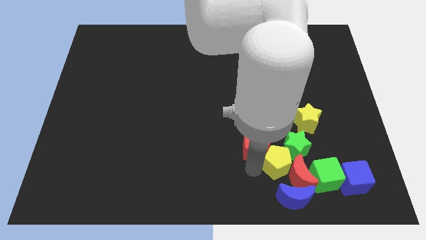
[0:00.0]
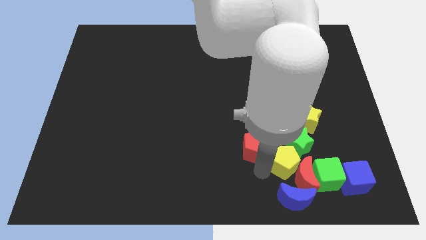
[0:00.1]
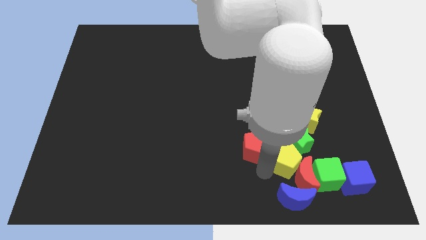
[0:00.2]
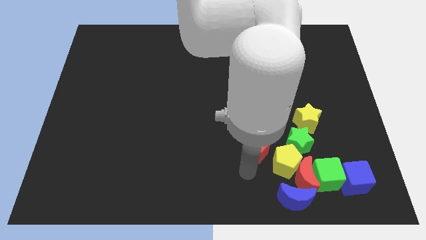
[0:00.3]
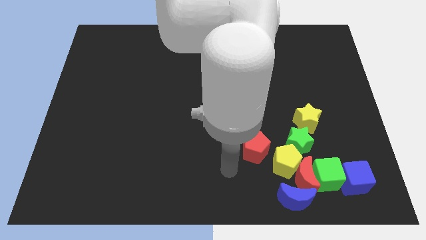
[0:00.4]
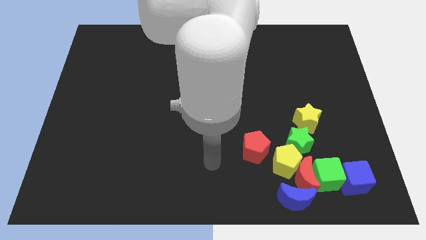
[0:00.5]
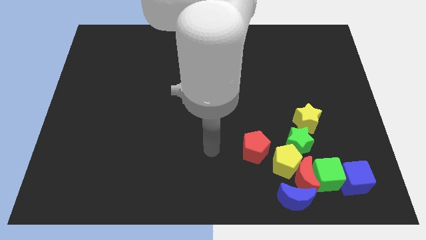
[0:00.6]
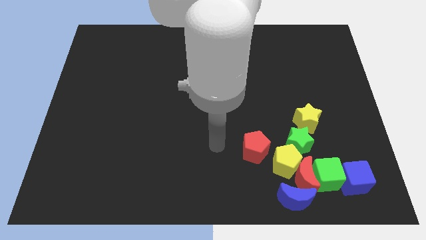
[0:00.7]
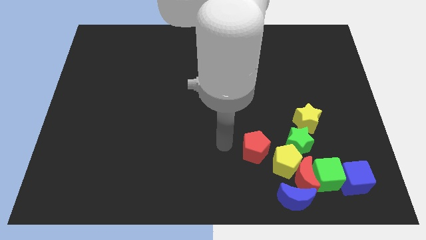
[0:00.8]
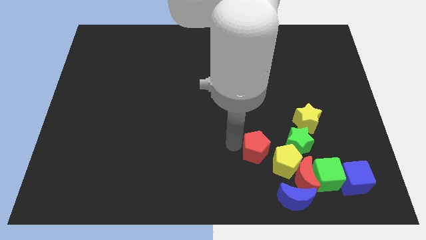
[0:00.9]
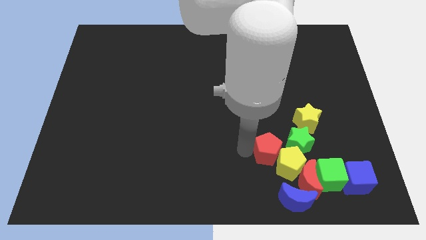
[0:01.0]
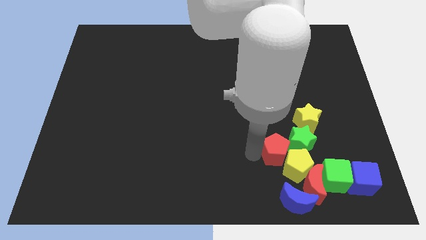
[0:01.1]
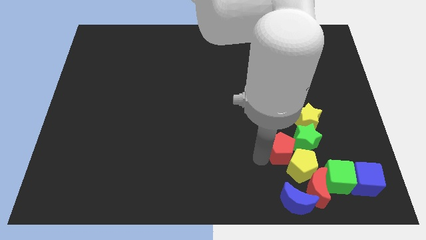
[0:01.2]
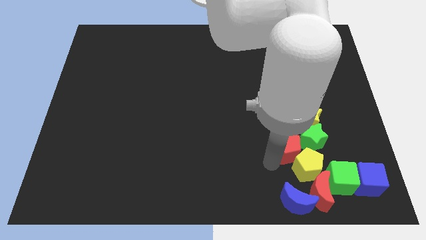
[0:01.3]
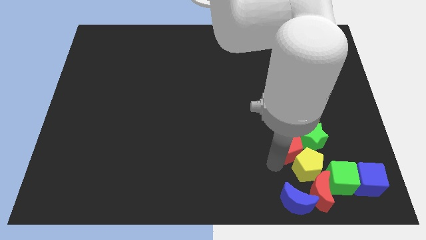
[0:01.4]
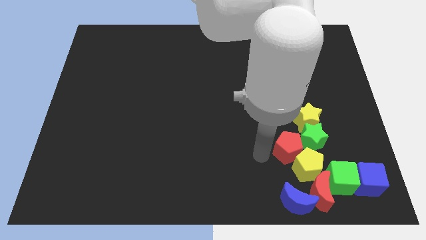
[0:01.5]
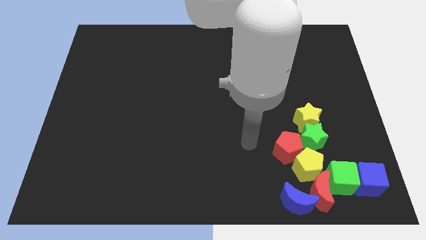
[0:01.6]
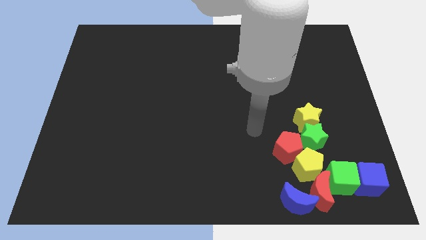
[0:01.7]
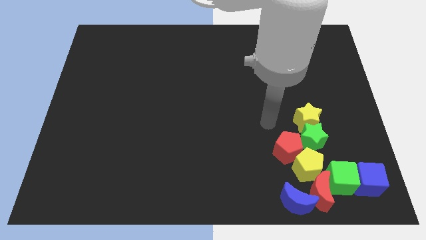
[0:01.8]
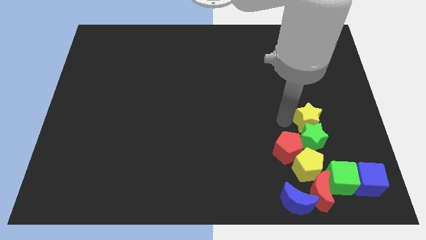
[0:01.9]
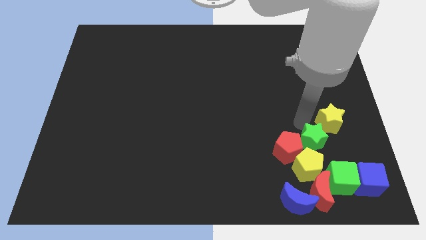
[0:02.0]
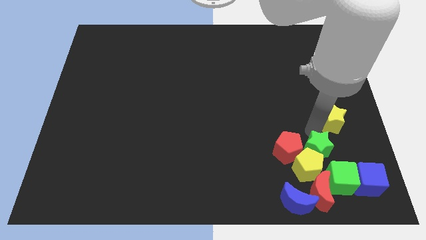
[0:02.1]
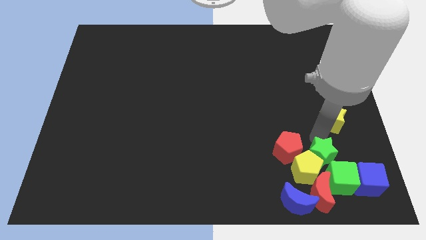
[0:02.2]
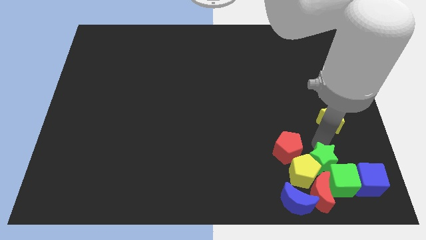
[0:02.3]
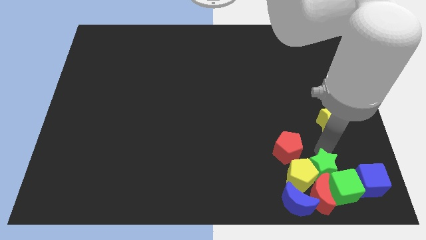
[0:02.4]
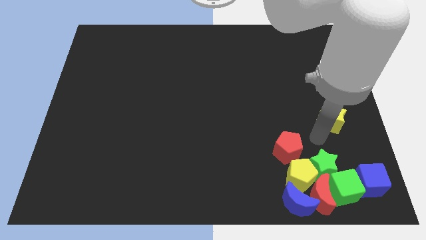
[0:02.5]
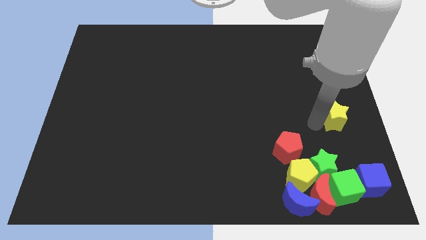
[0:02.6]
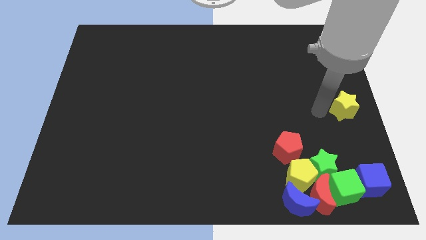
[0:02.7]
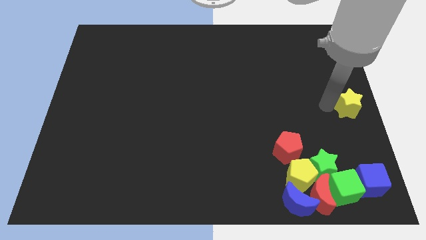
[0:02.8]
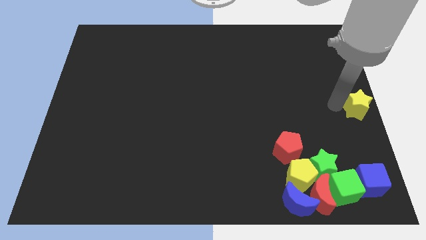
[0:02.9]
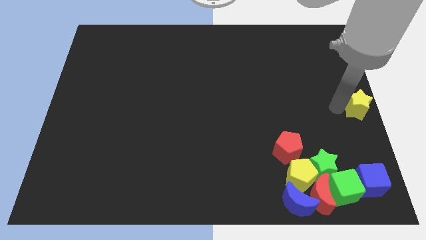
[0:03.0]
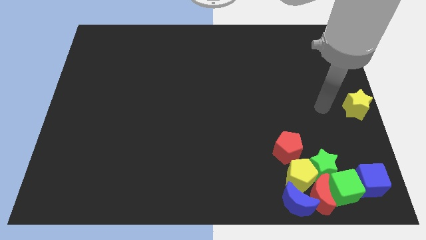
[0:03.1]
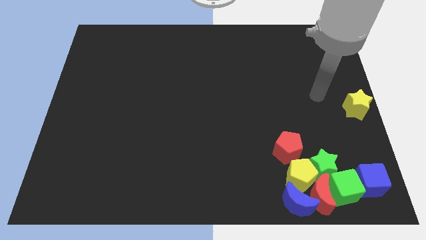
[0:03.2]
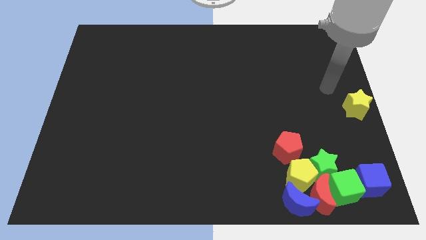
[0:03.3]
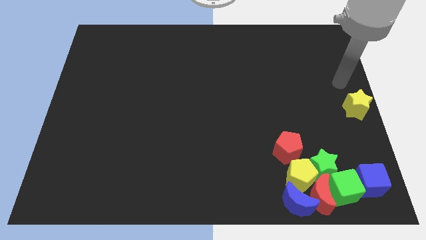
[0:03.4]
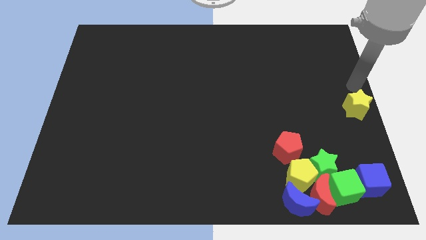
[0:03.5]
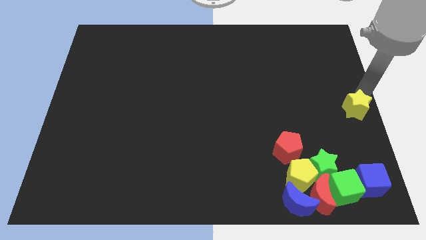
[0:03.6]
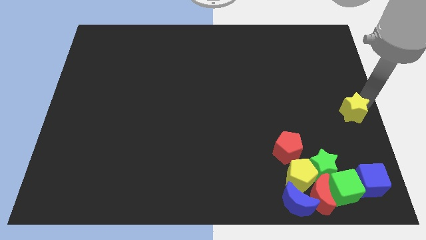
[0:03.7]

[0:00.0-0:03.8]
separate the yellow star from group of blocks

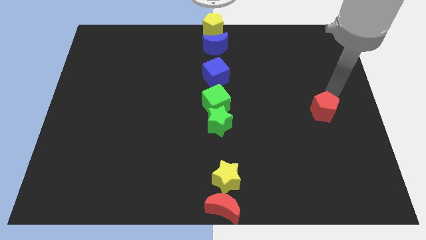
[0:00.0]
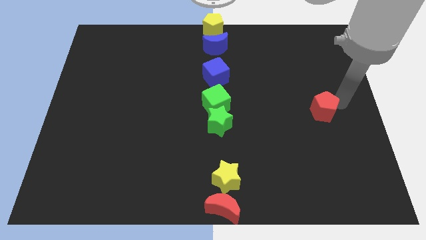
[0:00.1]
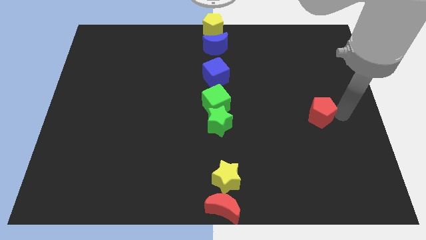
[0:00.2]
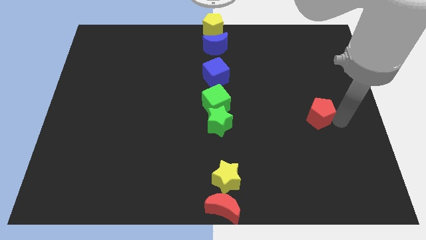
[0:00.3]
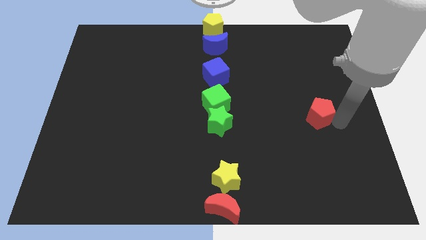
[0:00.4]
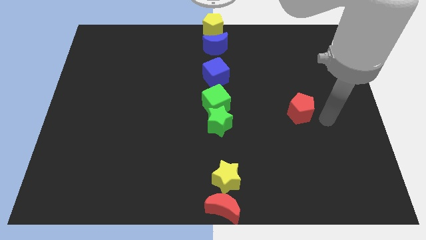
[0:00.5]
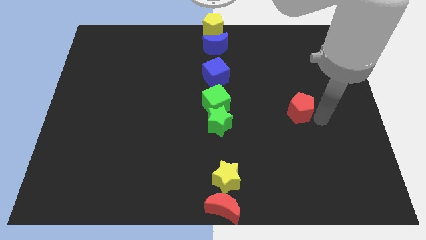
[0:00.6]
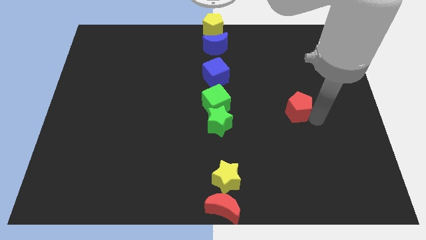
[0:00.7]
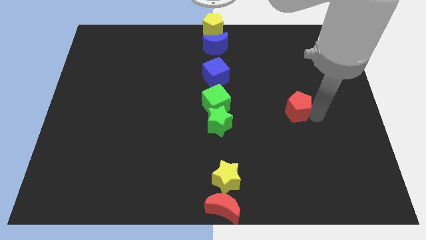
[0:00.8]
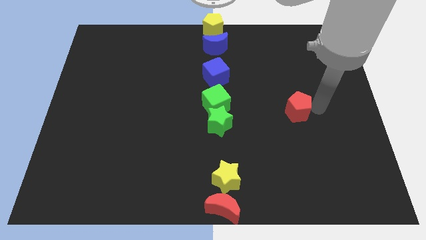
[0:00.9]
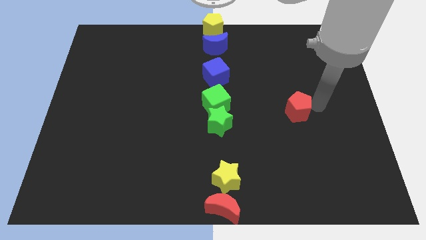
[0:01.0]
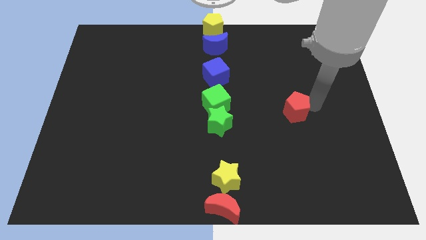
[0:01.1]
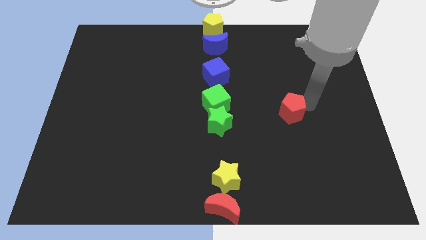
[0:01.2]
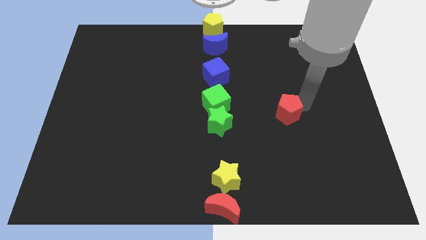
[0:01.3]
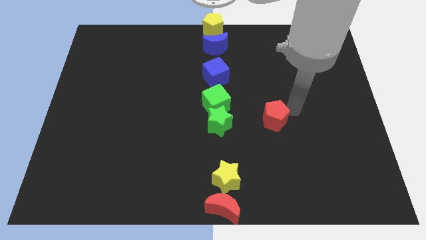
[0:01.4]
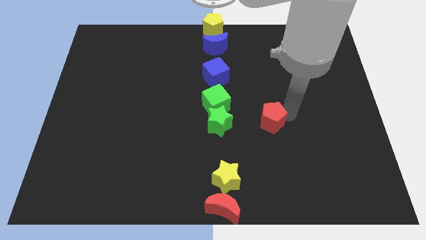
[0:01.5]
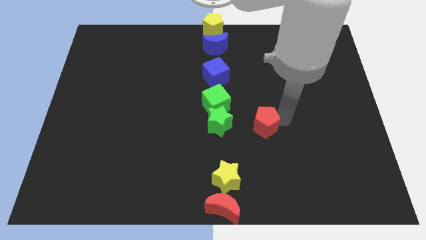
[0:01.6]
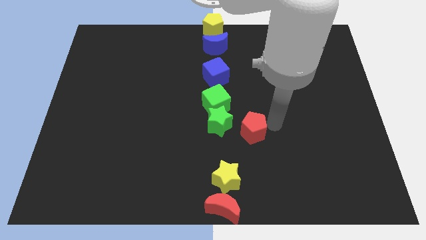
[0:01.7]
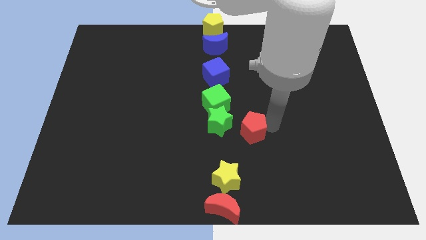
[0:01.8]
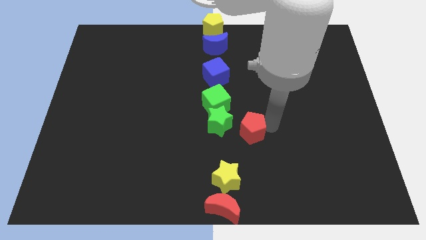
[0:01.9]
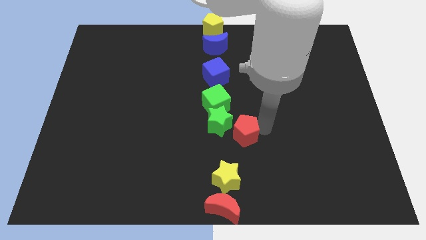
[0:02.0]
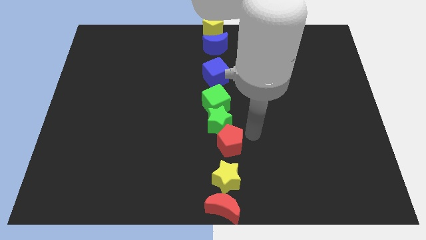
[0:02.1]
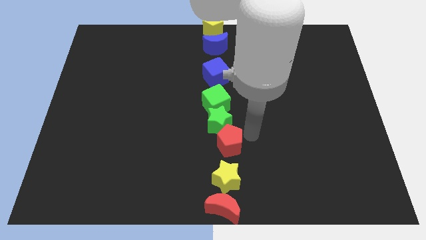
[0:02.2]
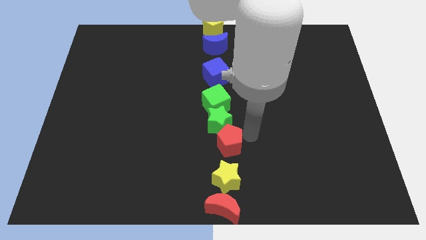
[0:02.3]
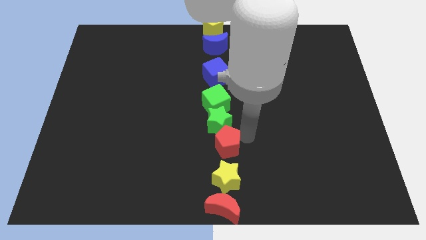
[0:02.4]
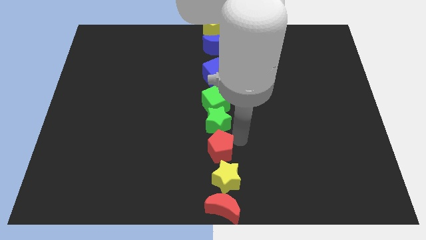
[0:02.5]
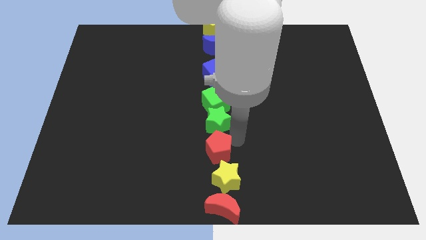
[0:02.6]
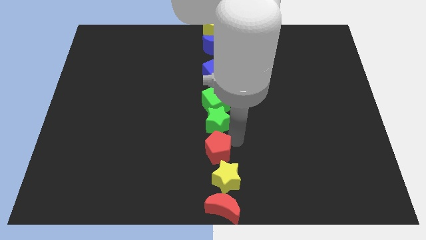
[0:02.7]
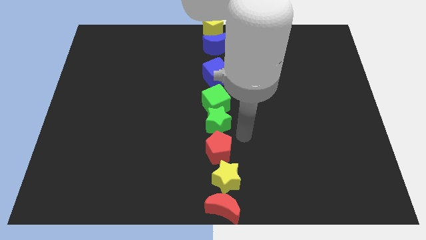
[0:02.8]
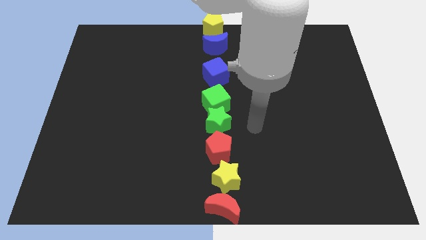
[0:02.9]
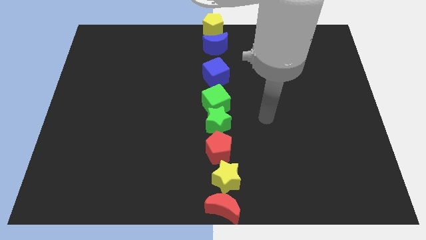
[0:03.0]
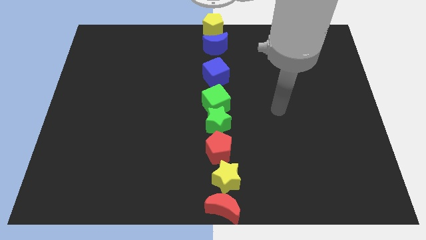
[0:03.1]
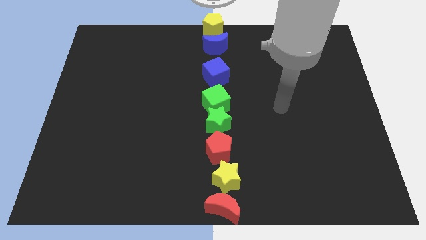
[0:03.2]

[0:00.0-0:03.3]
place the red pentagon to the bottom of the green star

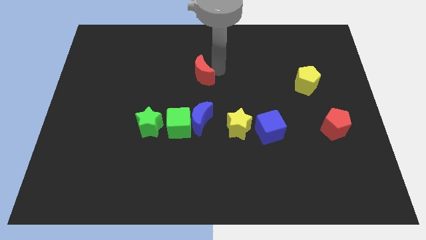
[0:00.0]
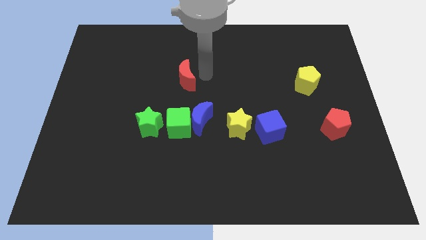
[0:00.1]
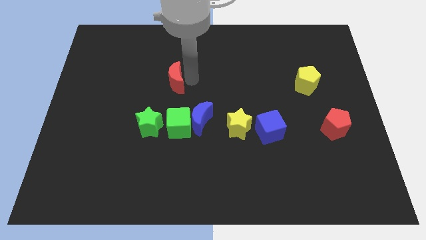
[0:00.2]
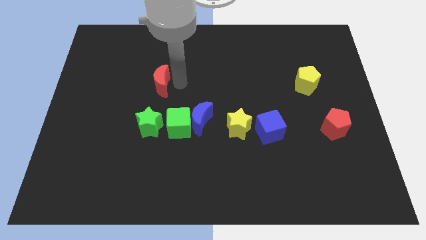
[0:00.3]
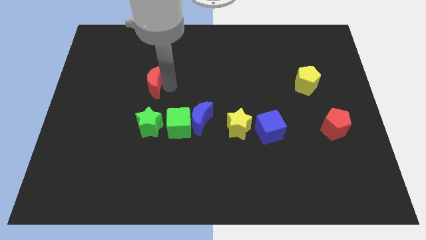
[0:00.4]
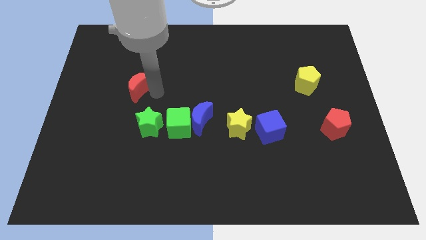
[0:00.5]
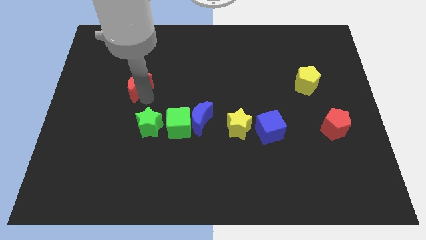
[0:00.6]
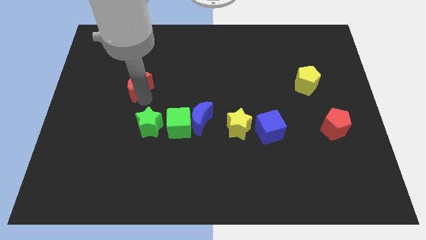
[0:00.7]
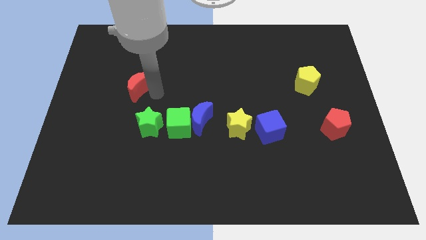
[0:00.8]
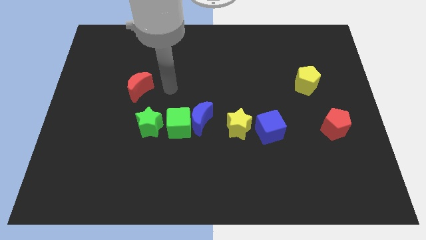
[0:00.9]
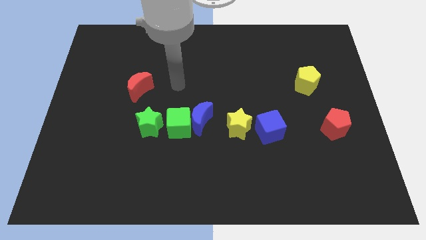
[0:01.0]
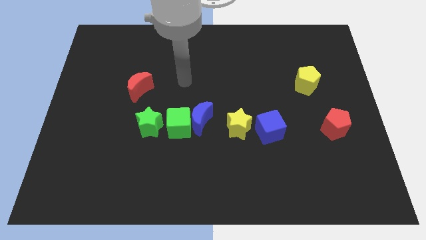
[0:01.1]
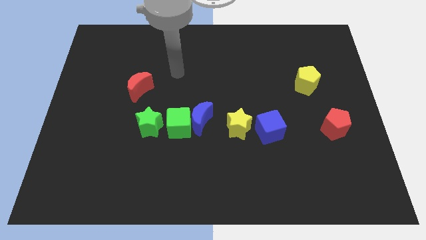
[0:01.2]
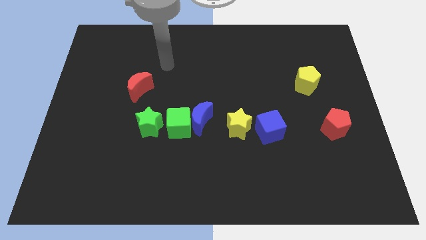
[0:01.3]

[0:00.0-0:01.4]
move the red crescent to the top left of the green star

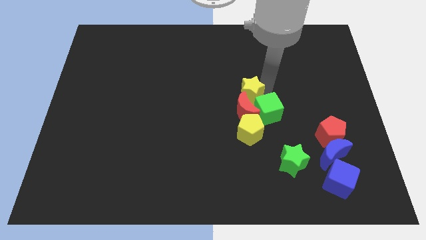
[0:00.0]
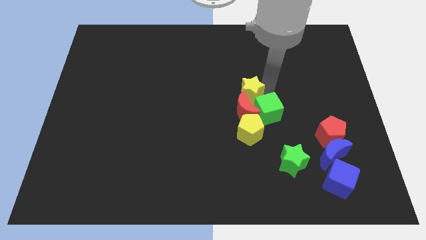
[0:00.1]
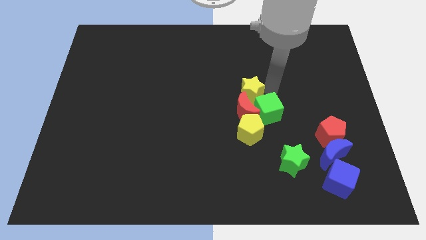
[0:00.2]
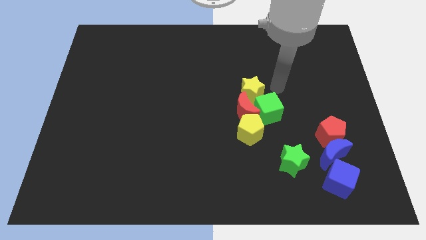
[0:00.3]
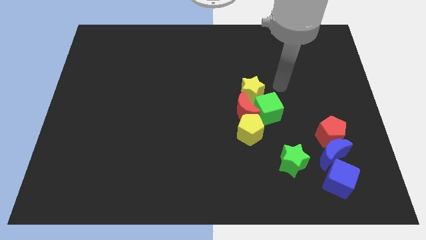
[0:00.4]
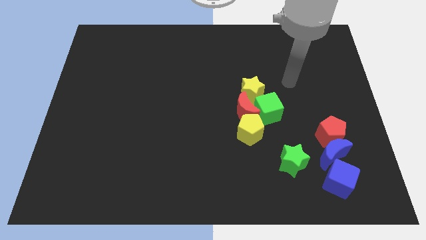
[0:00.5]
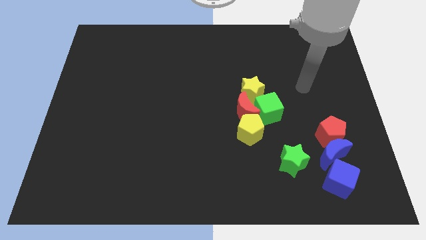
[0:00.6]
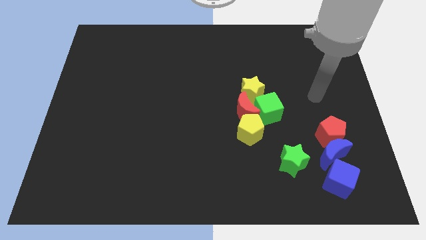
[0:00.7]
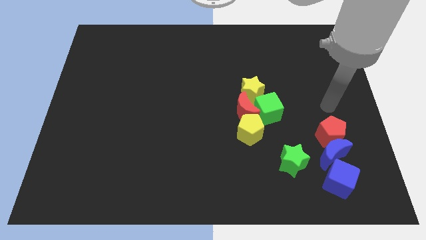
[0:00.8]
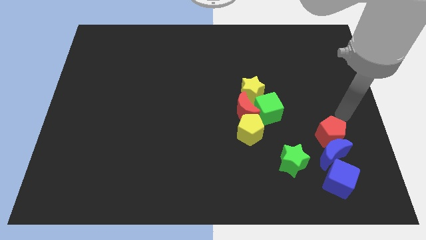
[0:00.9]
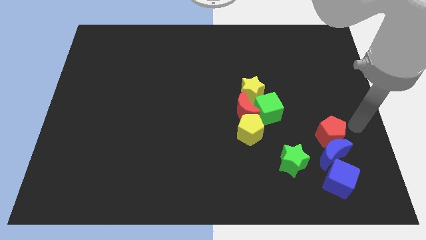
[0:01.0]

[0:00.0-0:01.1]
move your arm to the right of red pentagon
